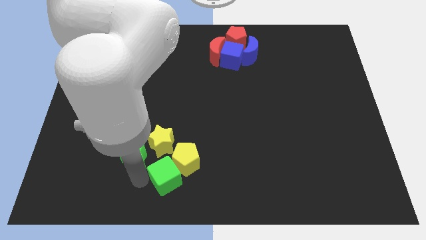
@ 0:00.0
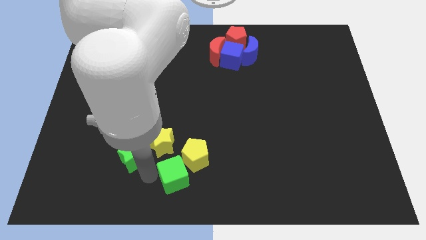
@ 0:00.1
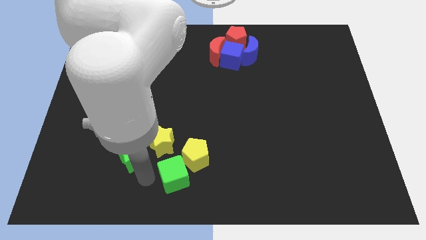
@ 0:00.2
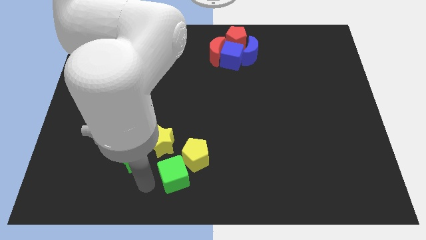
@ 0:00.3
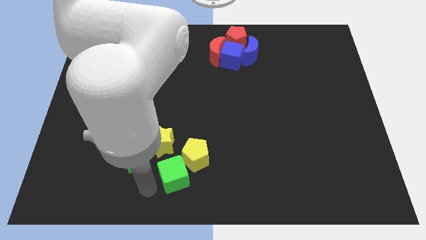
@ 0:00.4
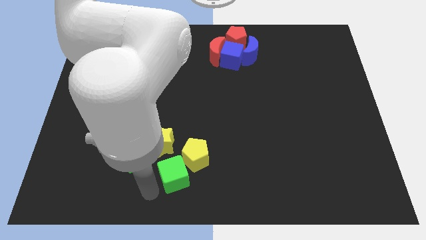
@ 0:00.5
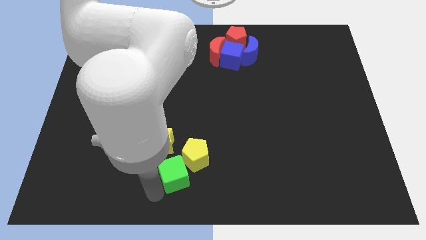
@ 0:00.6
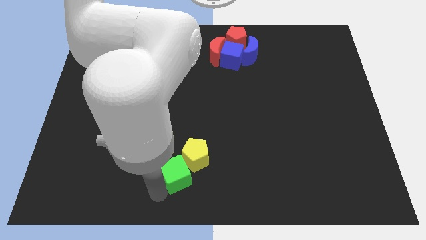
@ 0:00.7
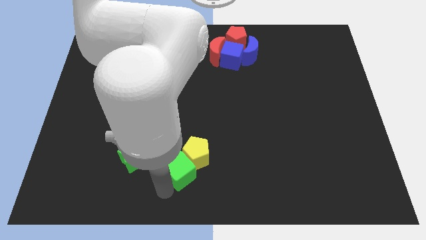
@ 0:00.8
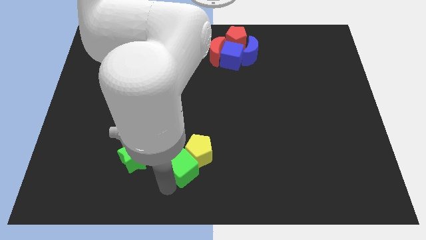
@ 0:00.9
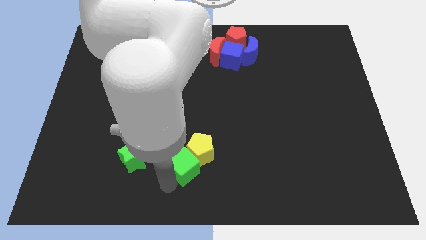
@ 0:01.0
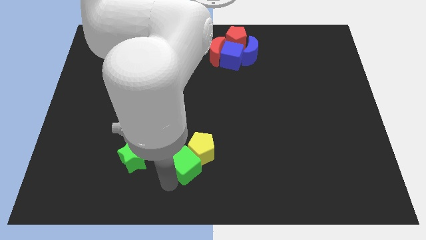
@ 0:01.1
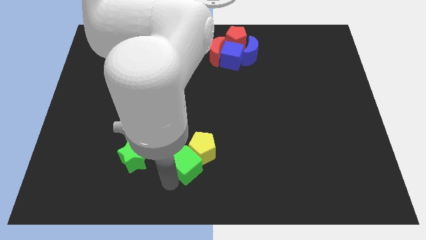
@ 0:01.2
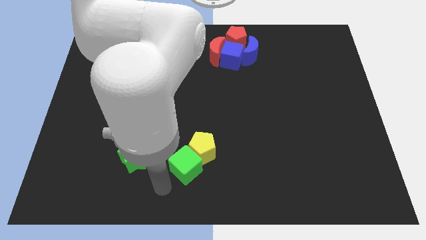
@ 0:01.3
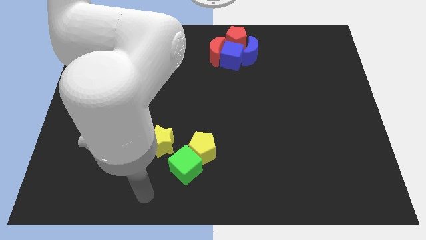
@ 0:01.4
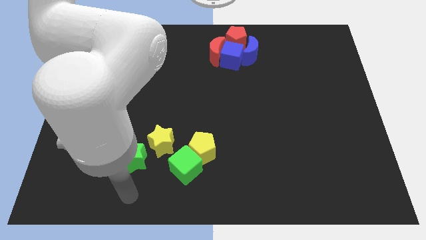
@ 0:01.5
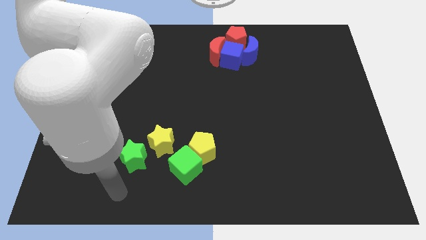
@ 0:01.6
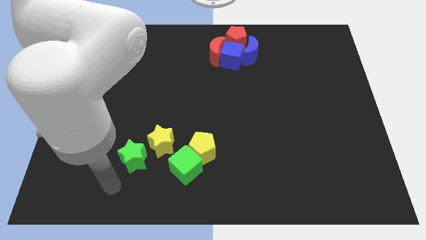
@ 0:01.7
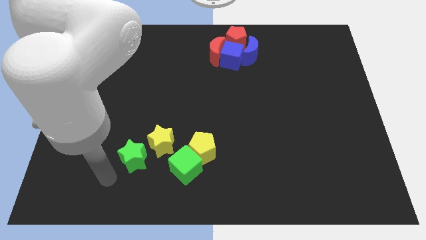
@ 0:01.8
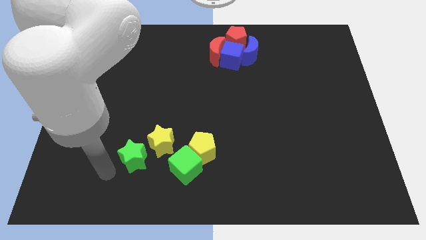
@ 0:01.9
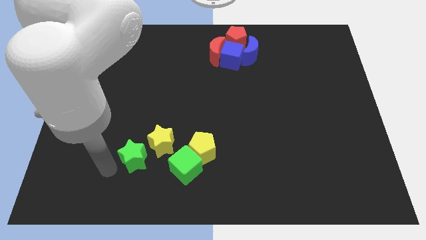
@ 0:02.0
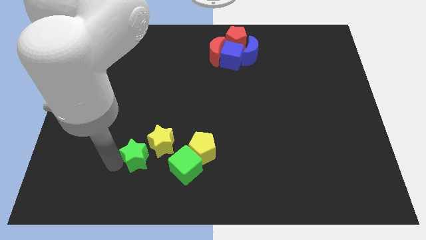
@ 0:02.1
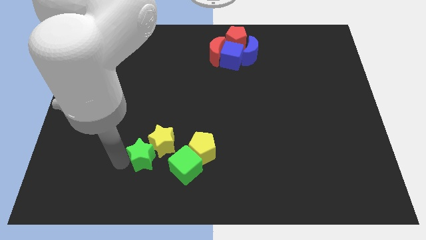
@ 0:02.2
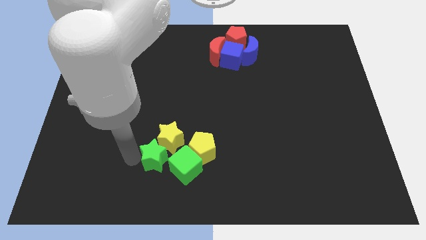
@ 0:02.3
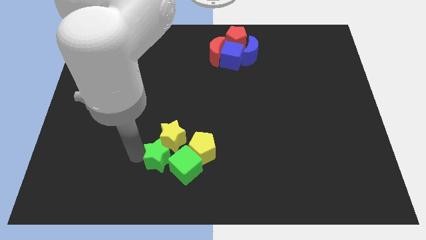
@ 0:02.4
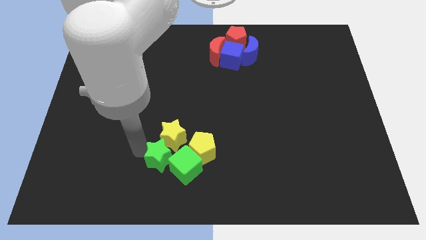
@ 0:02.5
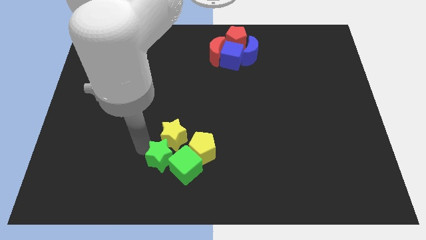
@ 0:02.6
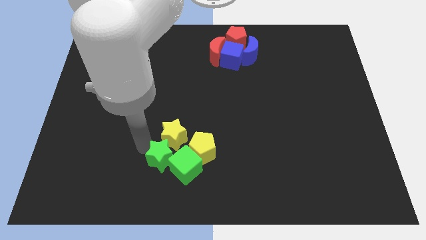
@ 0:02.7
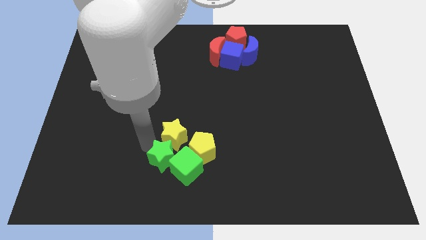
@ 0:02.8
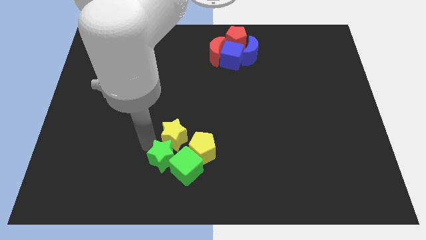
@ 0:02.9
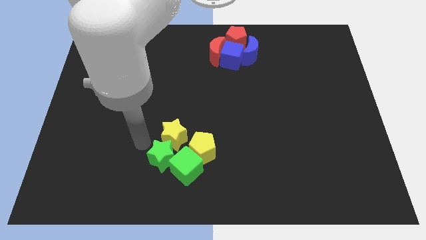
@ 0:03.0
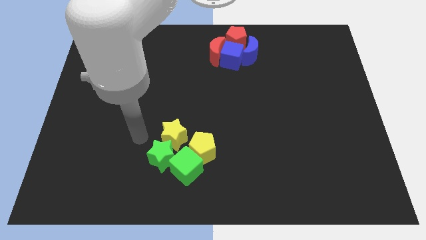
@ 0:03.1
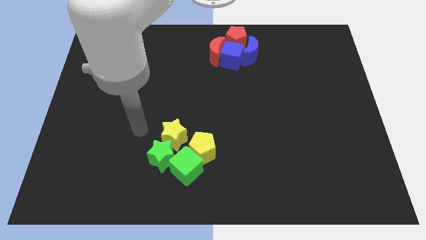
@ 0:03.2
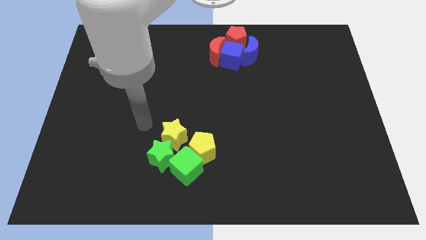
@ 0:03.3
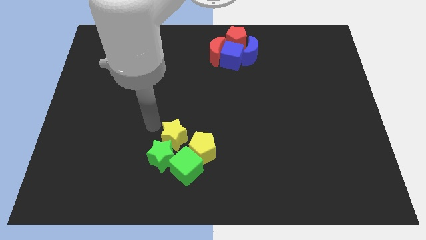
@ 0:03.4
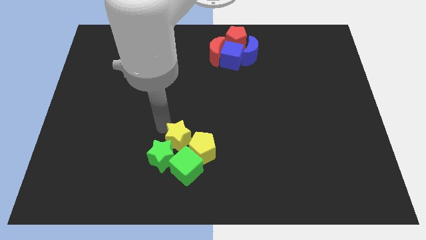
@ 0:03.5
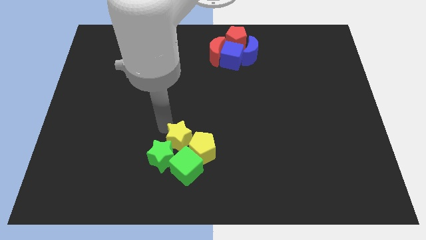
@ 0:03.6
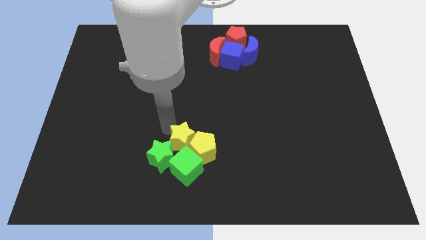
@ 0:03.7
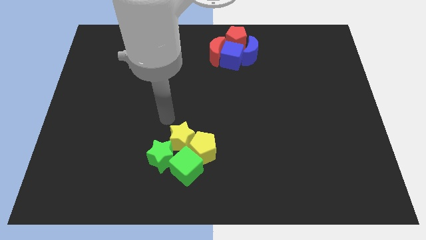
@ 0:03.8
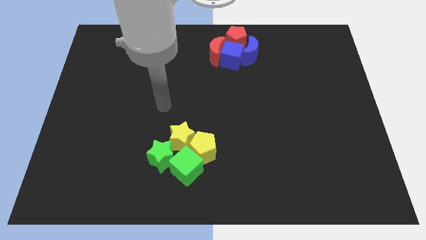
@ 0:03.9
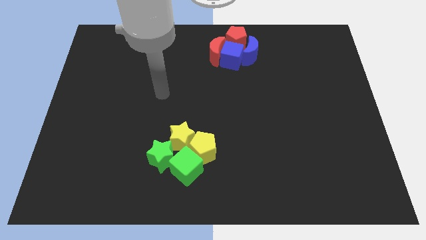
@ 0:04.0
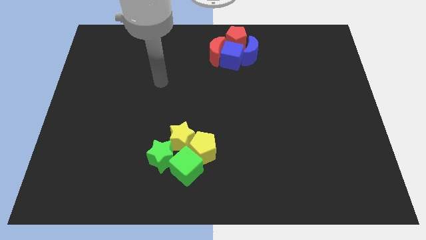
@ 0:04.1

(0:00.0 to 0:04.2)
make a group of yellow and green blocks at bottom center of board

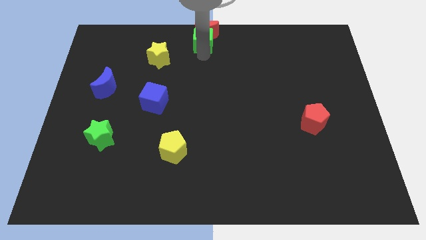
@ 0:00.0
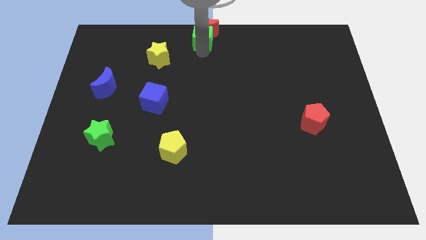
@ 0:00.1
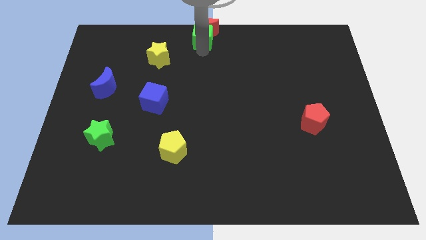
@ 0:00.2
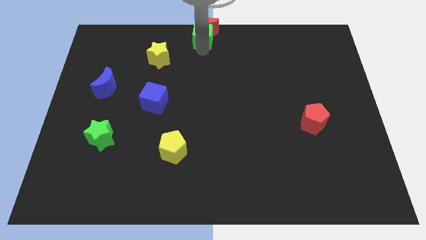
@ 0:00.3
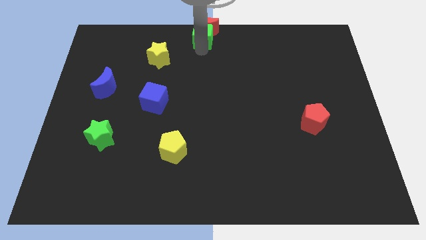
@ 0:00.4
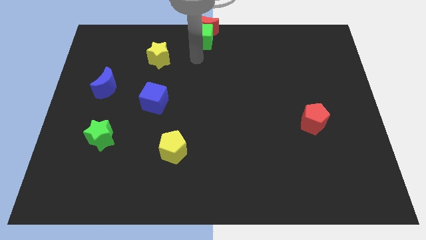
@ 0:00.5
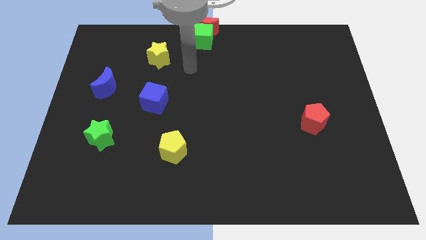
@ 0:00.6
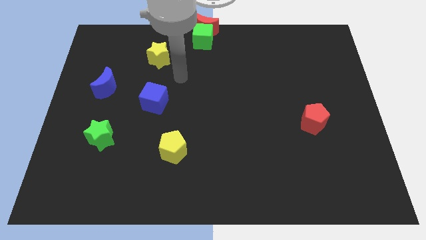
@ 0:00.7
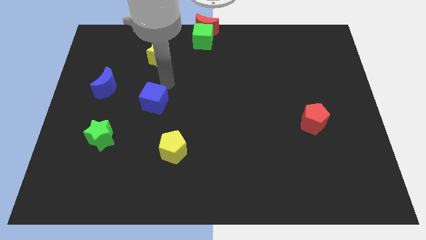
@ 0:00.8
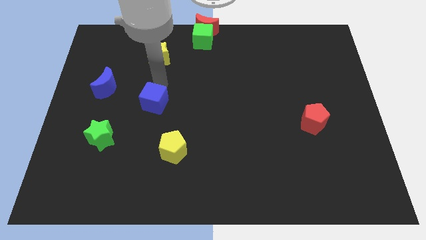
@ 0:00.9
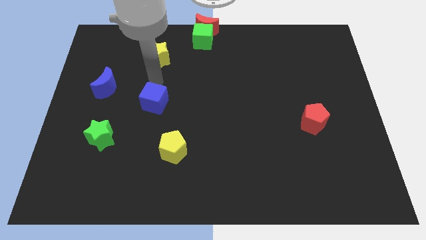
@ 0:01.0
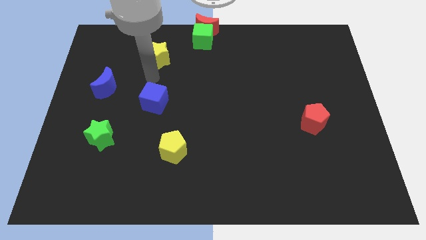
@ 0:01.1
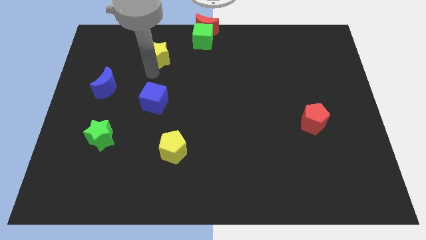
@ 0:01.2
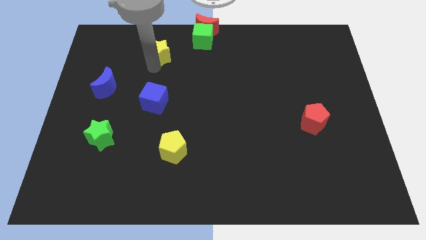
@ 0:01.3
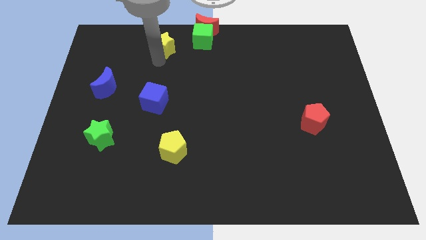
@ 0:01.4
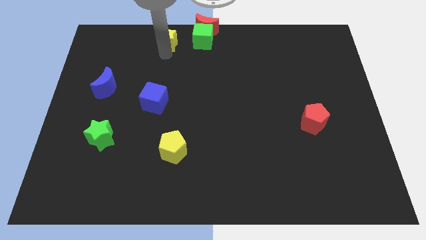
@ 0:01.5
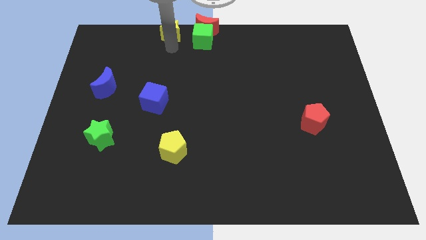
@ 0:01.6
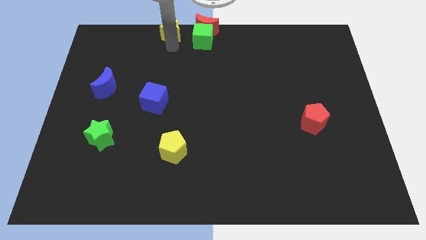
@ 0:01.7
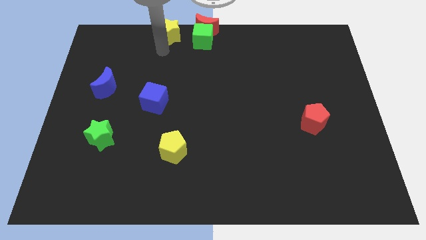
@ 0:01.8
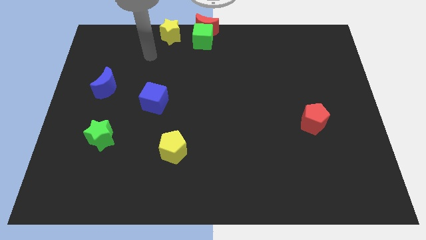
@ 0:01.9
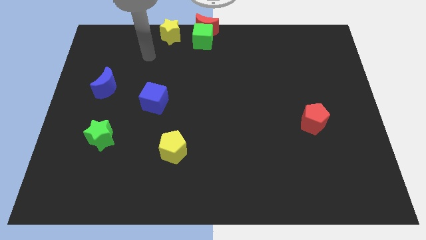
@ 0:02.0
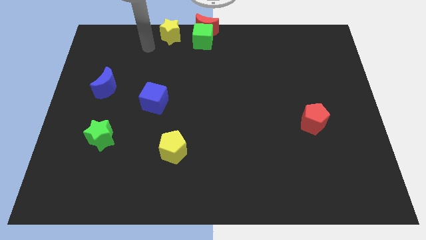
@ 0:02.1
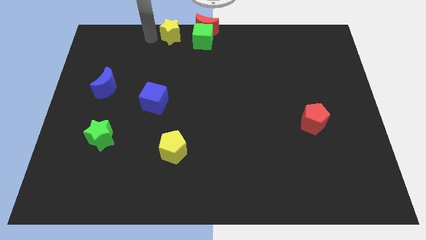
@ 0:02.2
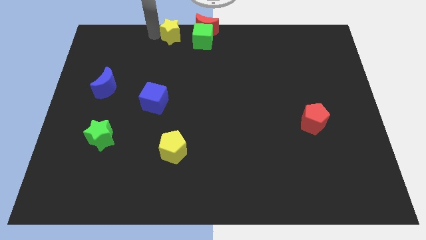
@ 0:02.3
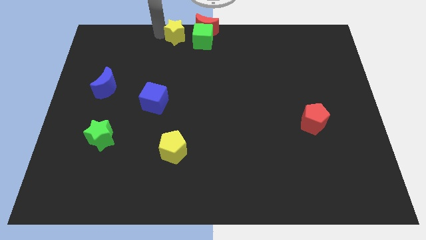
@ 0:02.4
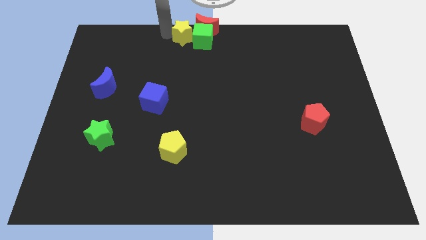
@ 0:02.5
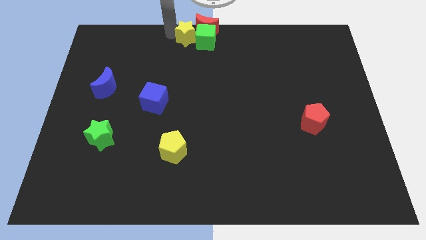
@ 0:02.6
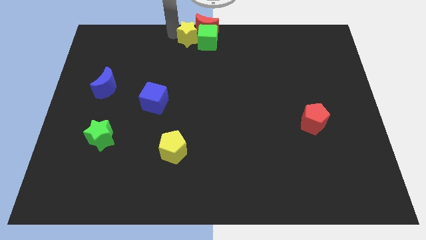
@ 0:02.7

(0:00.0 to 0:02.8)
slide the yellow star into the green cube

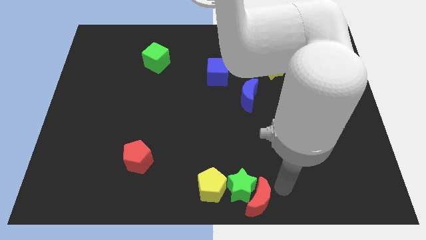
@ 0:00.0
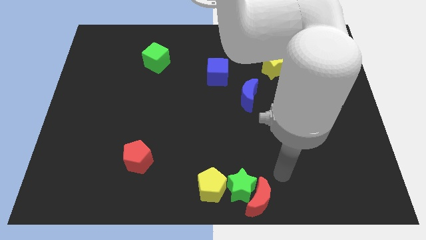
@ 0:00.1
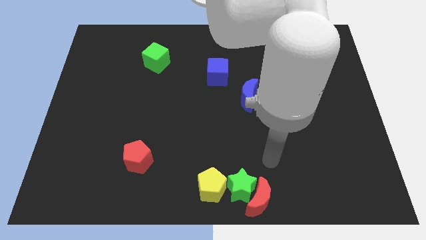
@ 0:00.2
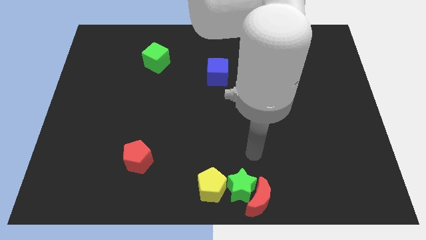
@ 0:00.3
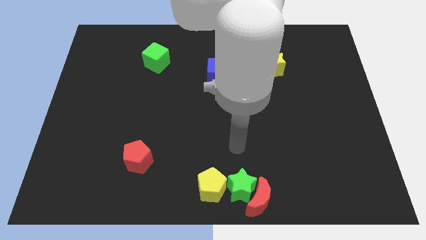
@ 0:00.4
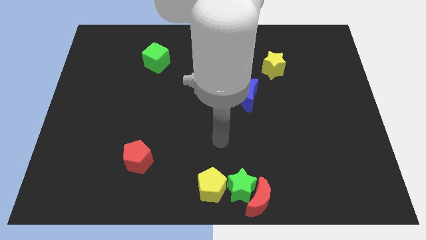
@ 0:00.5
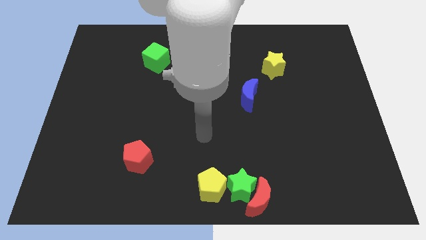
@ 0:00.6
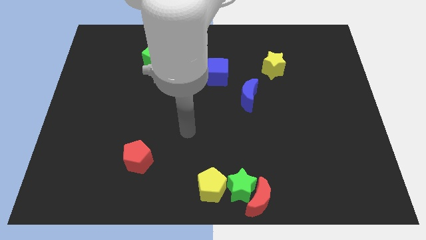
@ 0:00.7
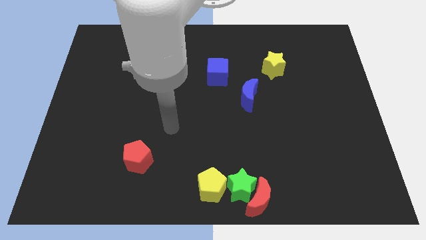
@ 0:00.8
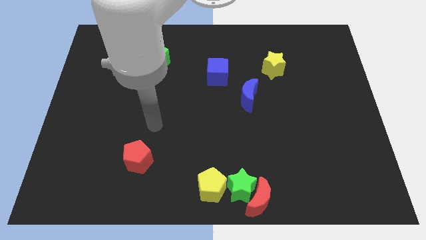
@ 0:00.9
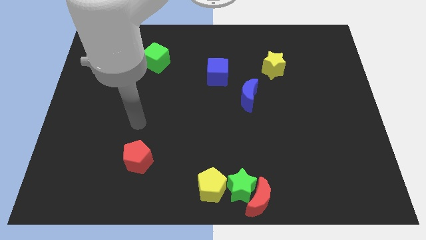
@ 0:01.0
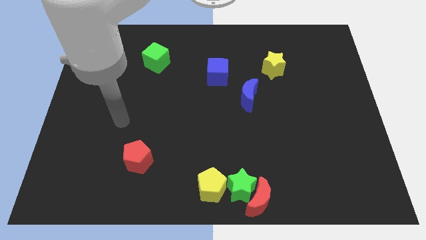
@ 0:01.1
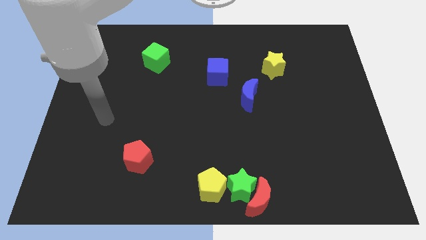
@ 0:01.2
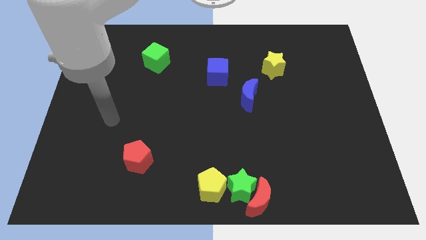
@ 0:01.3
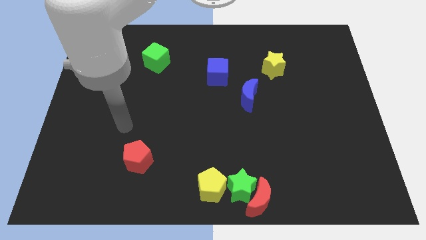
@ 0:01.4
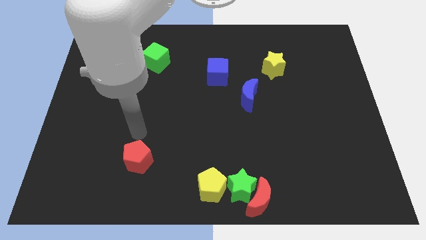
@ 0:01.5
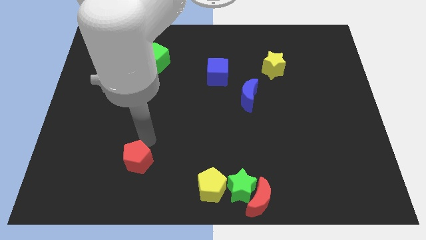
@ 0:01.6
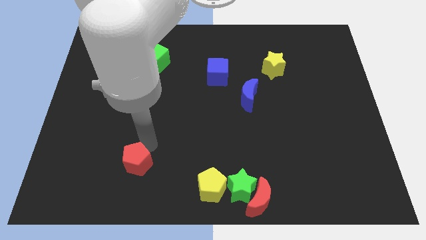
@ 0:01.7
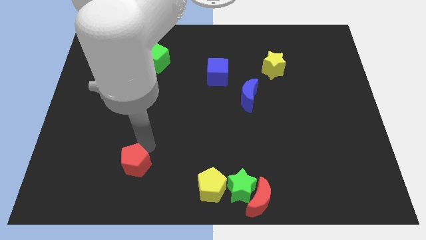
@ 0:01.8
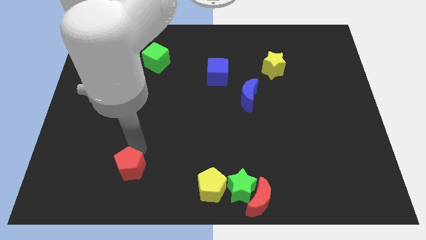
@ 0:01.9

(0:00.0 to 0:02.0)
move your arm away from the red moon

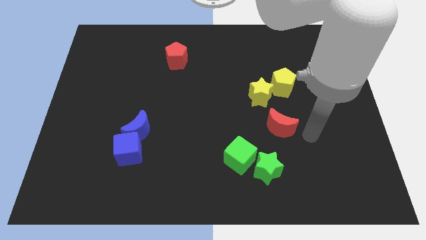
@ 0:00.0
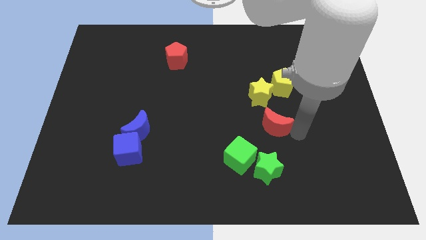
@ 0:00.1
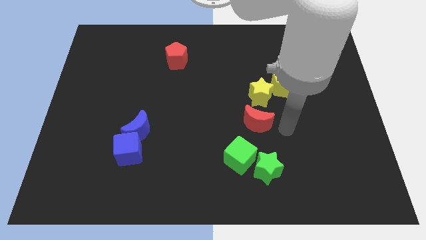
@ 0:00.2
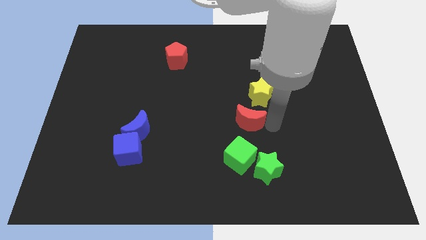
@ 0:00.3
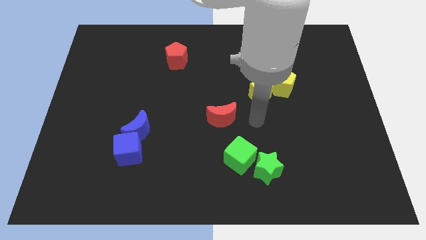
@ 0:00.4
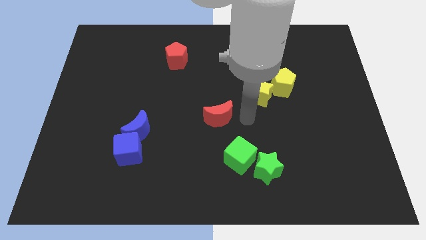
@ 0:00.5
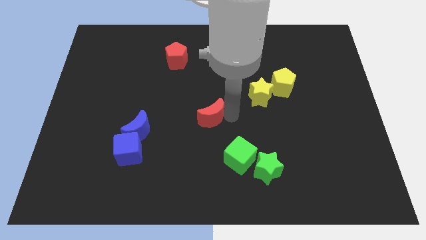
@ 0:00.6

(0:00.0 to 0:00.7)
place the red moon at the centre of the board
